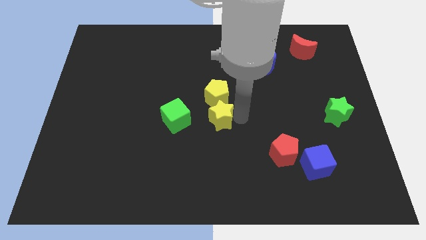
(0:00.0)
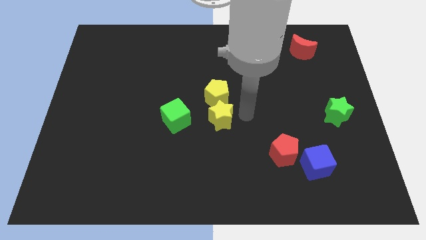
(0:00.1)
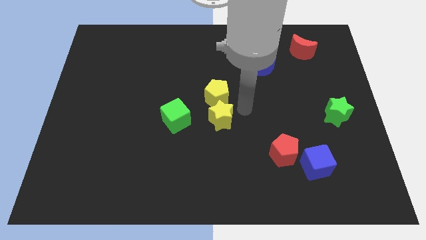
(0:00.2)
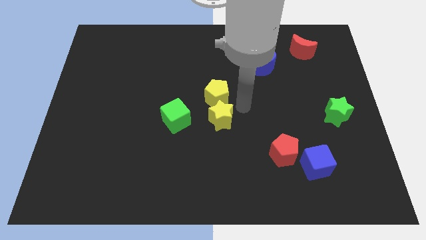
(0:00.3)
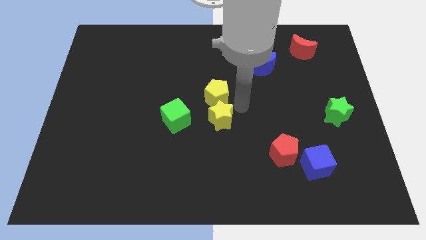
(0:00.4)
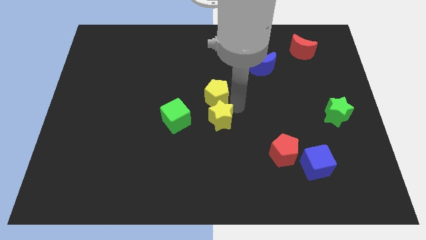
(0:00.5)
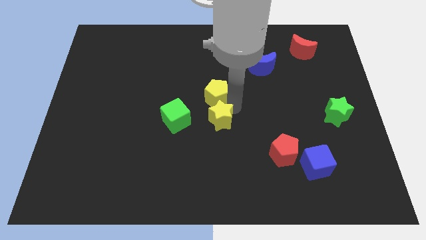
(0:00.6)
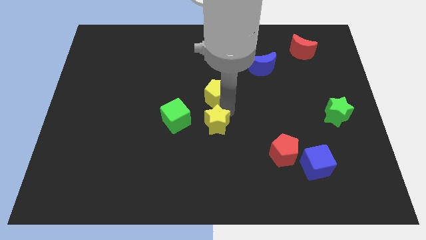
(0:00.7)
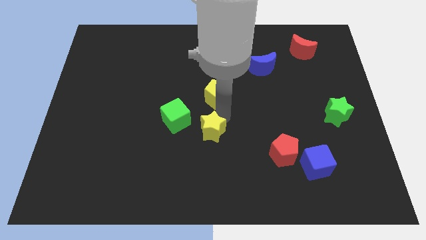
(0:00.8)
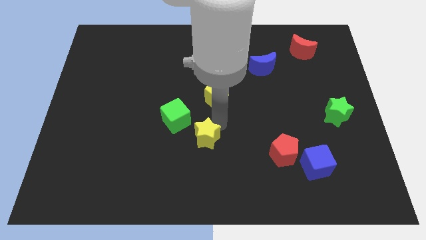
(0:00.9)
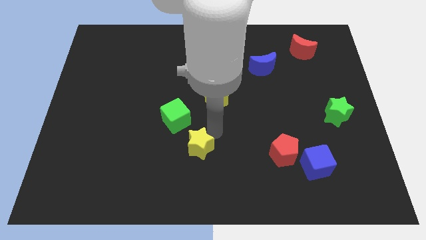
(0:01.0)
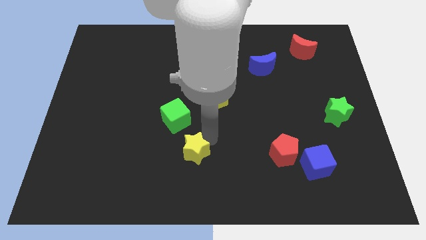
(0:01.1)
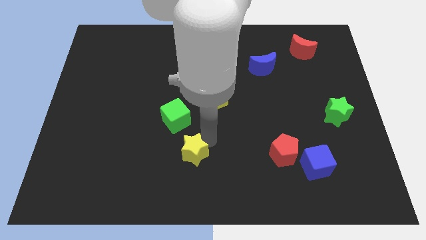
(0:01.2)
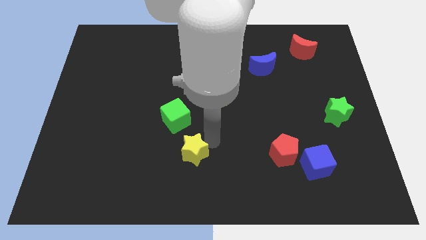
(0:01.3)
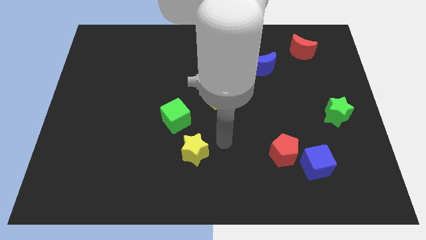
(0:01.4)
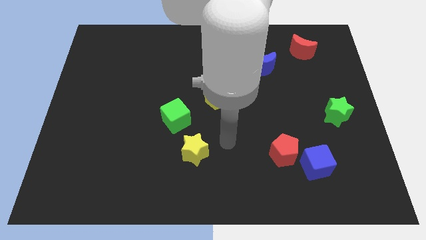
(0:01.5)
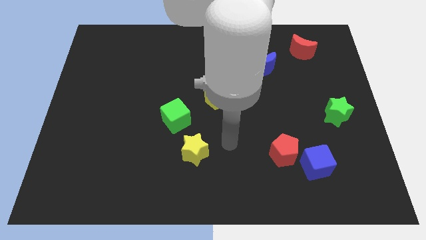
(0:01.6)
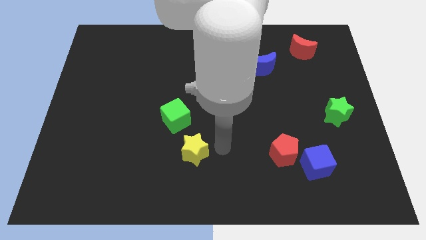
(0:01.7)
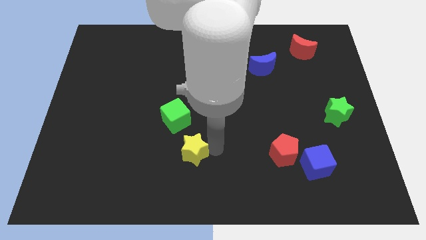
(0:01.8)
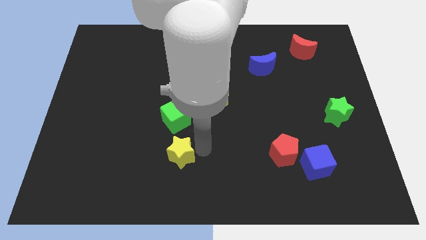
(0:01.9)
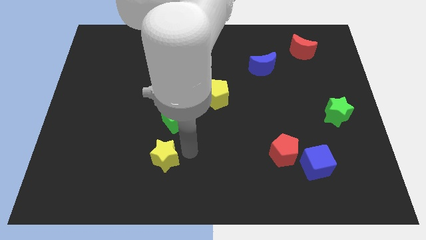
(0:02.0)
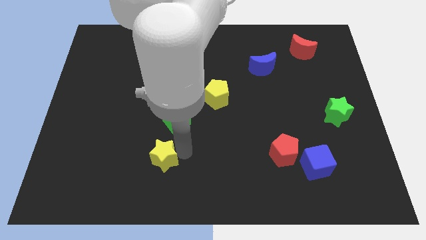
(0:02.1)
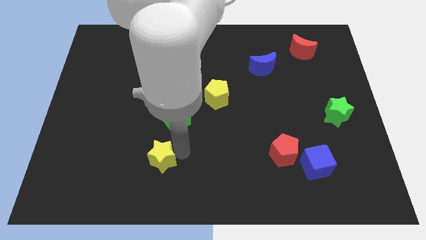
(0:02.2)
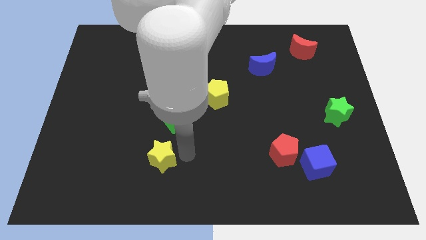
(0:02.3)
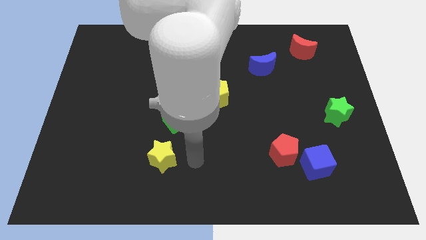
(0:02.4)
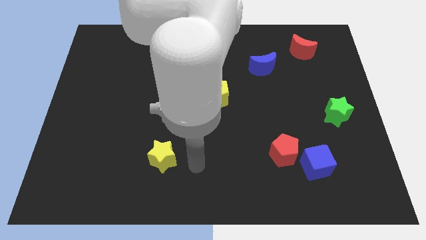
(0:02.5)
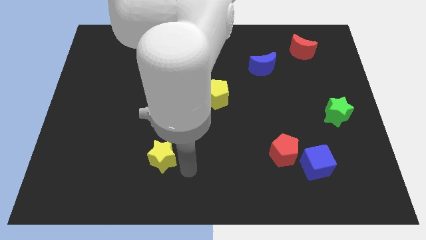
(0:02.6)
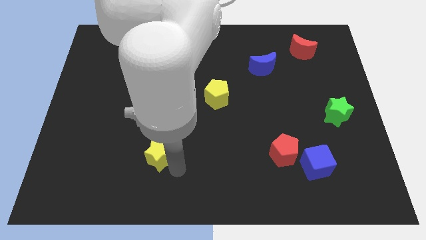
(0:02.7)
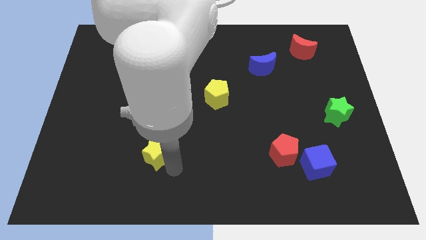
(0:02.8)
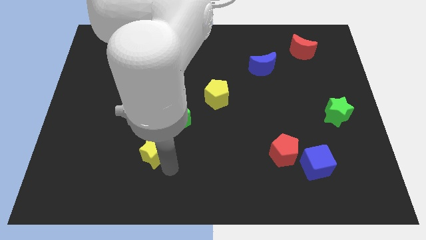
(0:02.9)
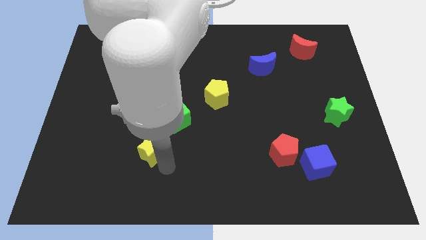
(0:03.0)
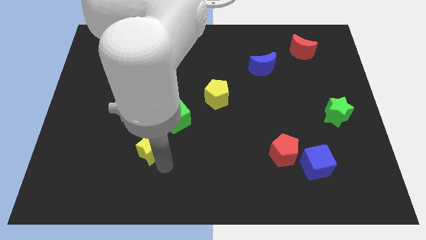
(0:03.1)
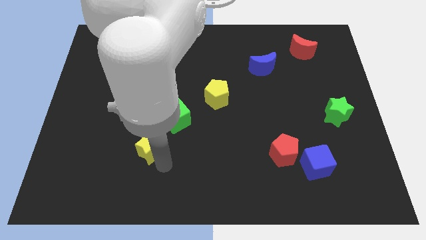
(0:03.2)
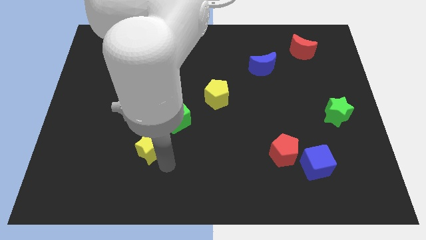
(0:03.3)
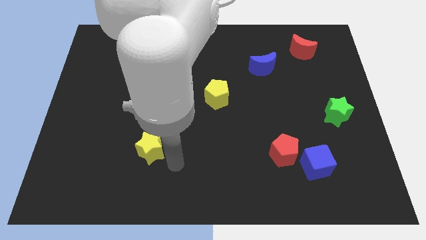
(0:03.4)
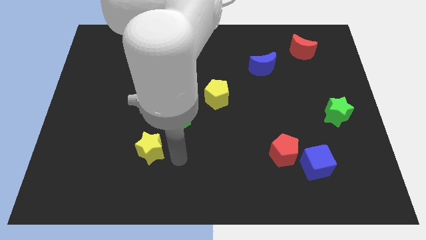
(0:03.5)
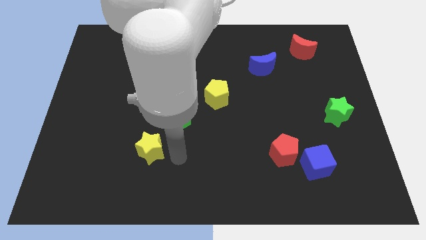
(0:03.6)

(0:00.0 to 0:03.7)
seperate yellow star from yellow pentagon

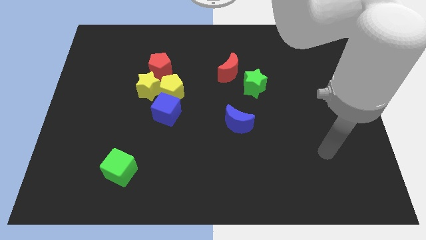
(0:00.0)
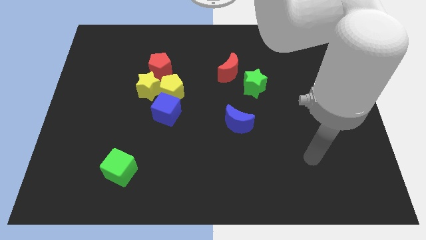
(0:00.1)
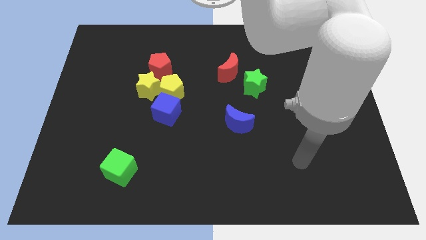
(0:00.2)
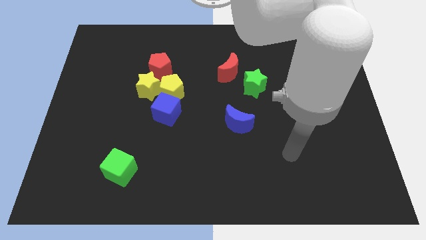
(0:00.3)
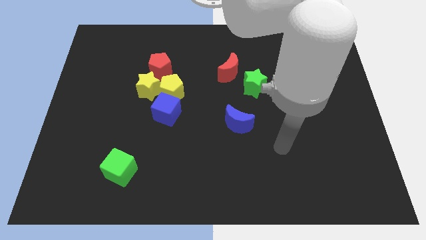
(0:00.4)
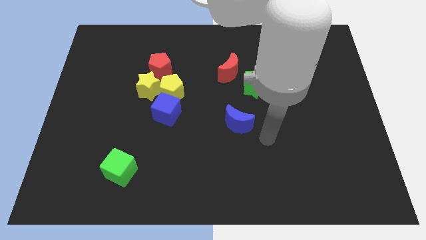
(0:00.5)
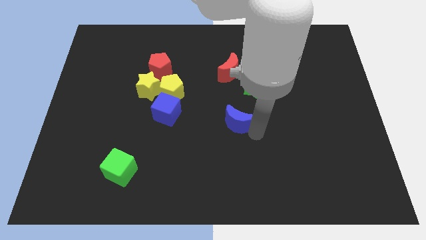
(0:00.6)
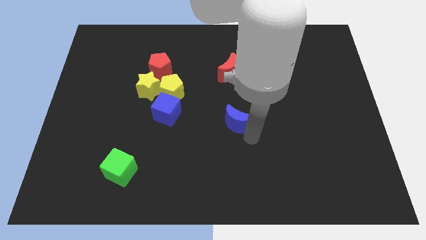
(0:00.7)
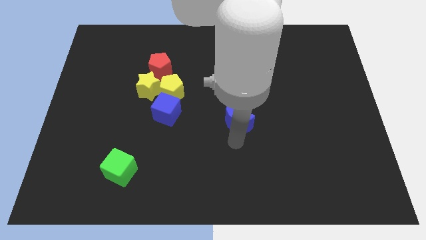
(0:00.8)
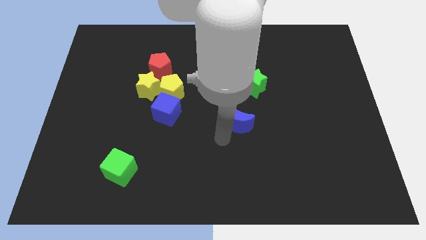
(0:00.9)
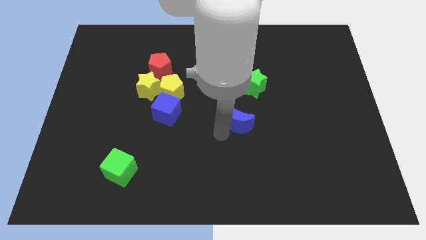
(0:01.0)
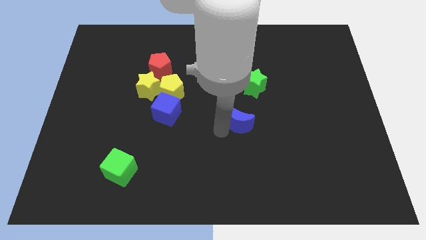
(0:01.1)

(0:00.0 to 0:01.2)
move your arm towards the blue crescent

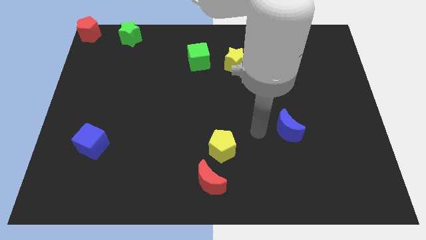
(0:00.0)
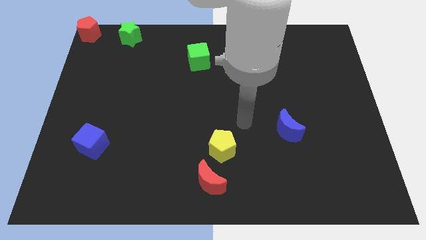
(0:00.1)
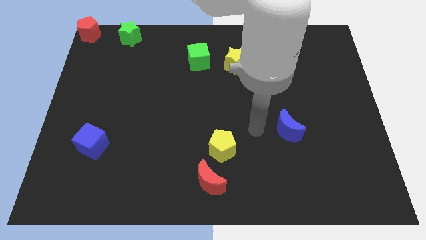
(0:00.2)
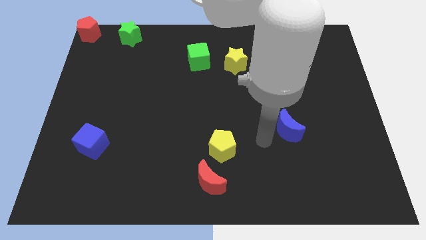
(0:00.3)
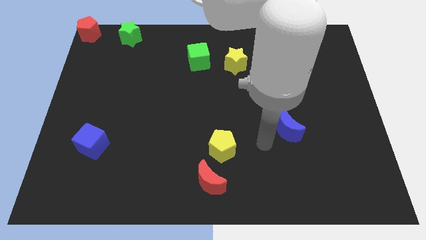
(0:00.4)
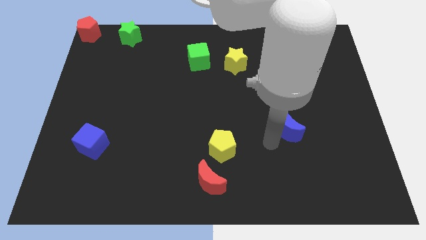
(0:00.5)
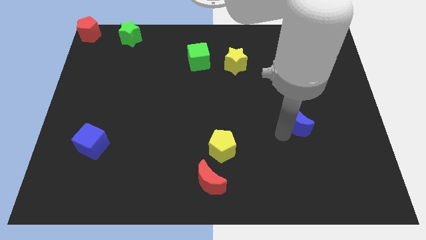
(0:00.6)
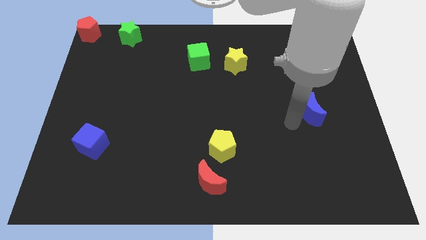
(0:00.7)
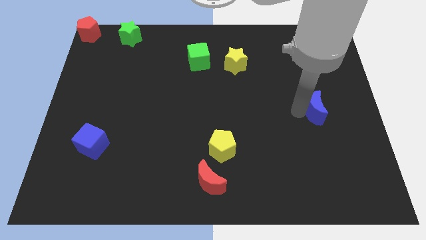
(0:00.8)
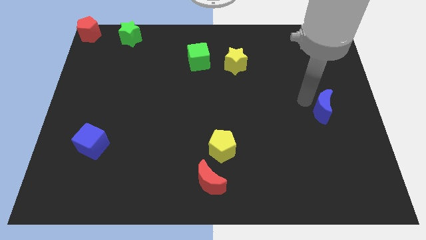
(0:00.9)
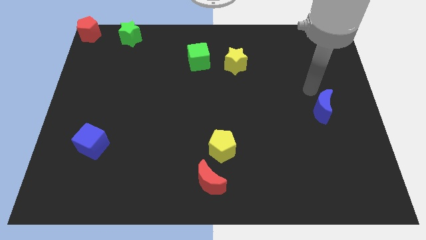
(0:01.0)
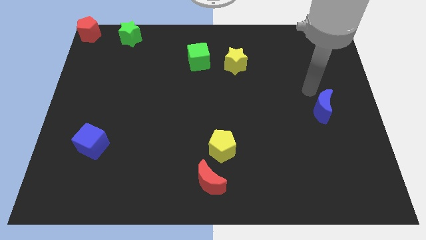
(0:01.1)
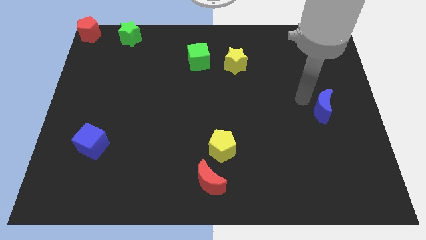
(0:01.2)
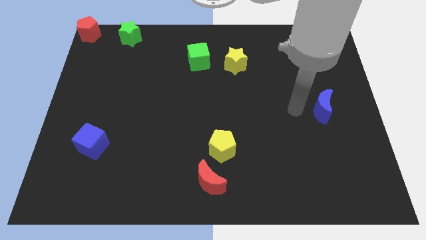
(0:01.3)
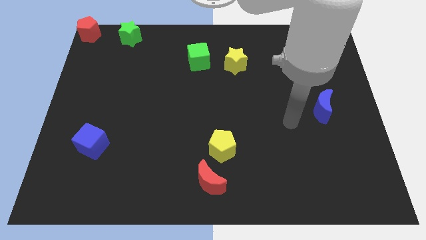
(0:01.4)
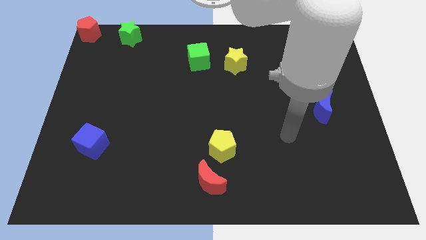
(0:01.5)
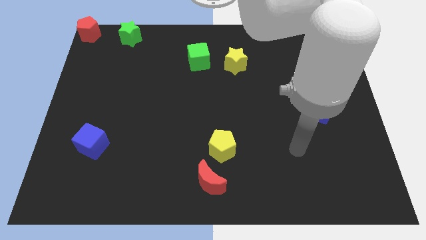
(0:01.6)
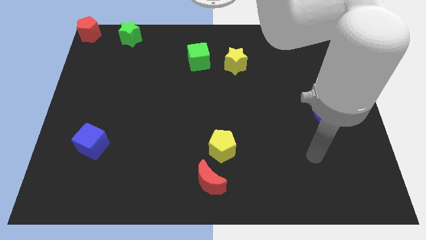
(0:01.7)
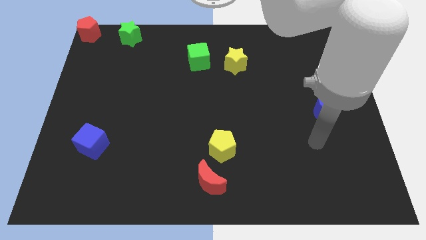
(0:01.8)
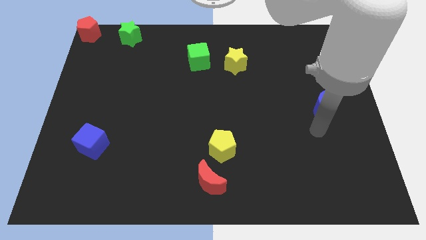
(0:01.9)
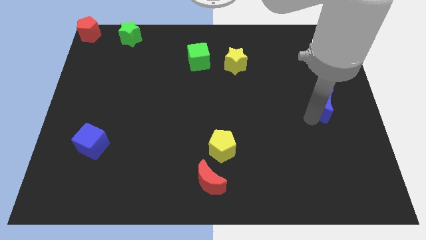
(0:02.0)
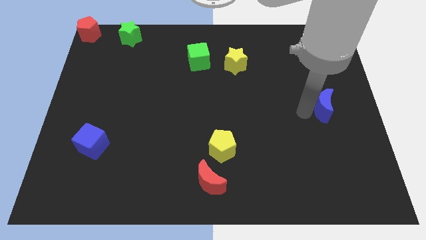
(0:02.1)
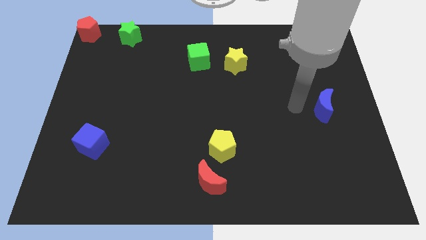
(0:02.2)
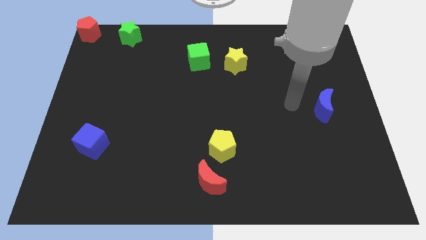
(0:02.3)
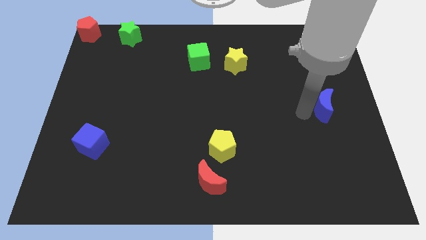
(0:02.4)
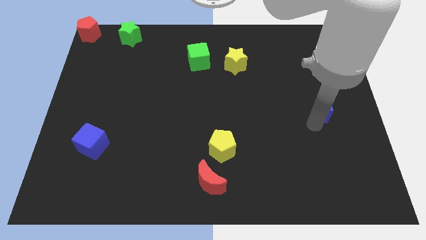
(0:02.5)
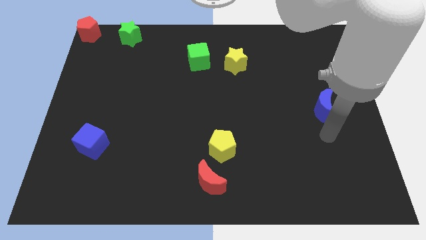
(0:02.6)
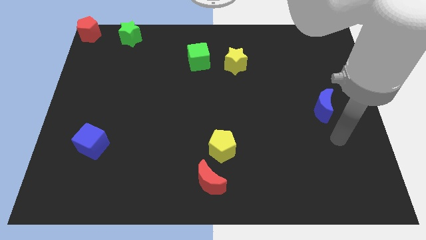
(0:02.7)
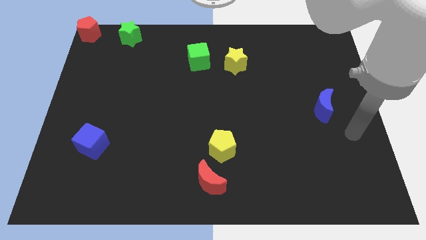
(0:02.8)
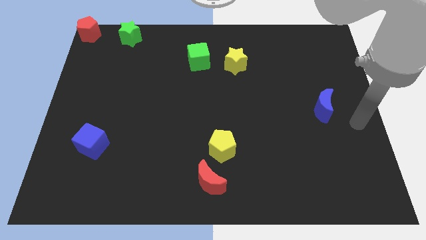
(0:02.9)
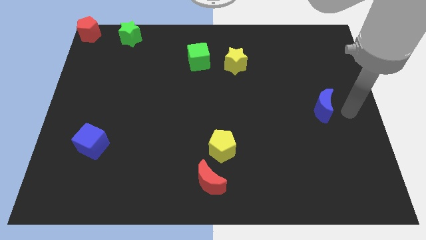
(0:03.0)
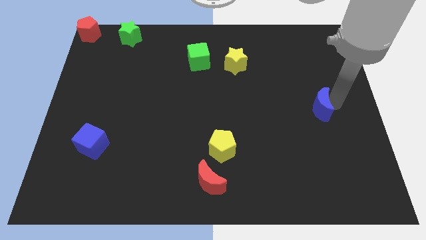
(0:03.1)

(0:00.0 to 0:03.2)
move the blue crescent towards the center right

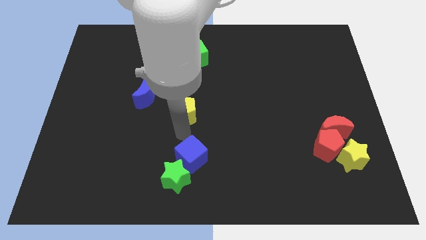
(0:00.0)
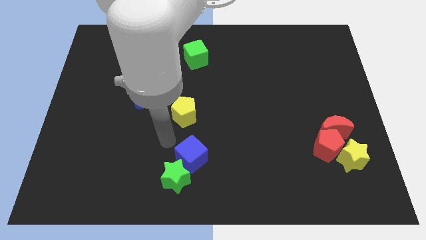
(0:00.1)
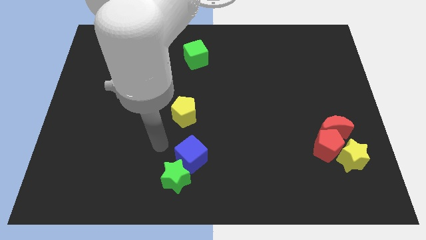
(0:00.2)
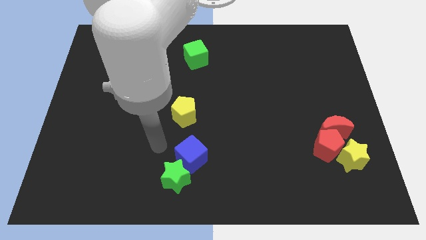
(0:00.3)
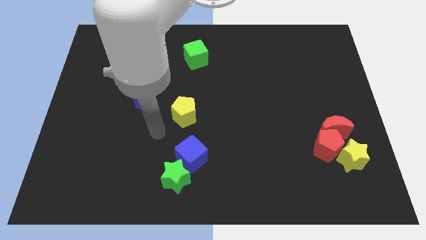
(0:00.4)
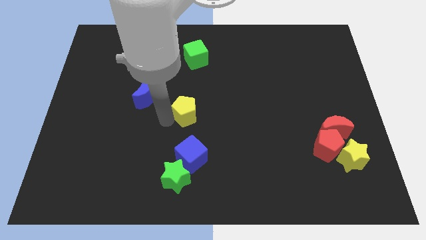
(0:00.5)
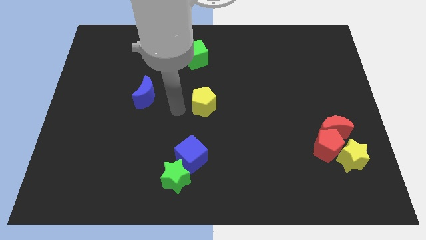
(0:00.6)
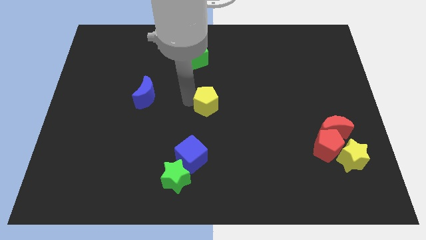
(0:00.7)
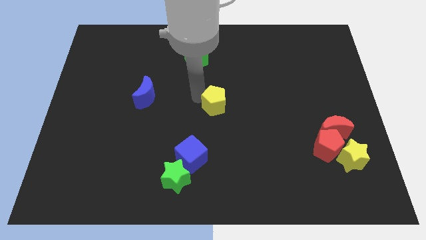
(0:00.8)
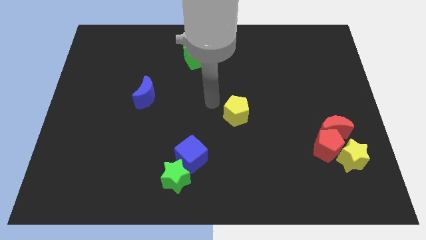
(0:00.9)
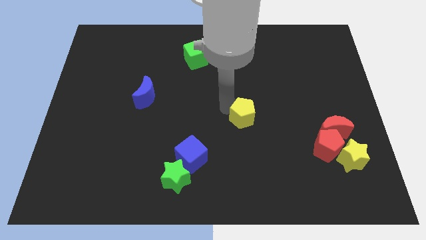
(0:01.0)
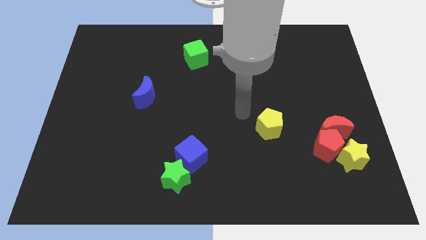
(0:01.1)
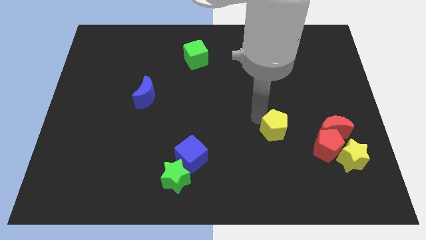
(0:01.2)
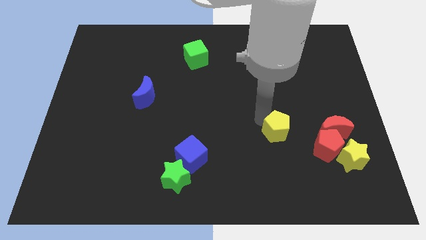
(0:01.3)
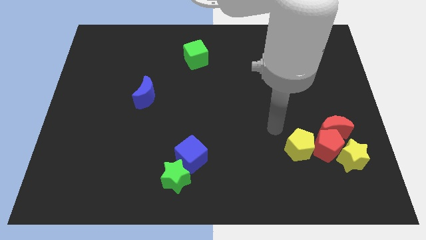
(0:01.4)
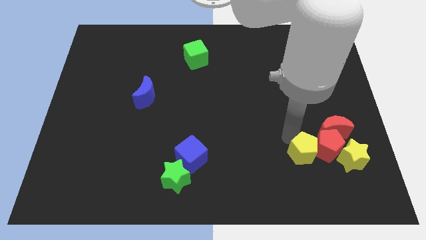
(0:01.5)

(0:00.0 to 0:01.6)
move the yellow pentagon to the left of the red pentagon
